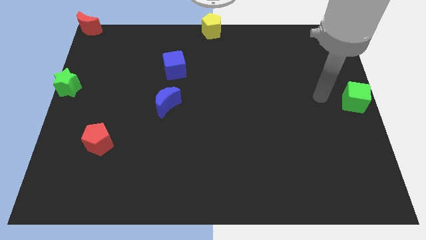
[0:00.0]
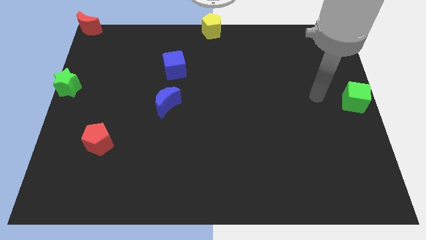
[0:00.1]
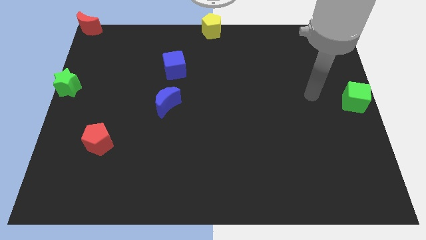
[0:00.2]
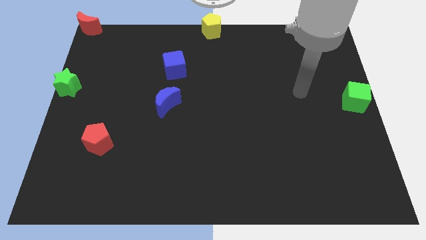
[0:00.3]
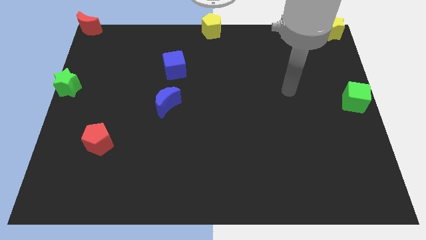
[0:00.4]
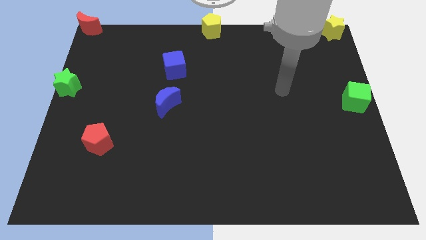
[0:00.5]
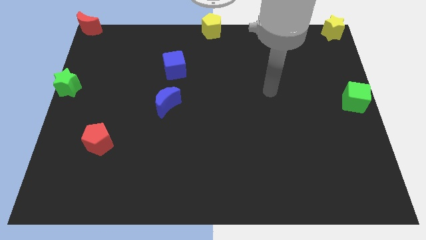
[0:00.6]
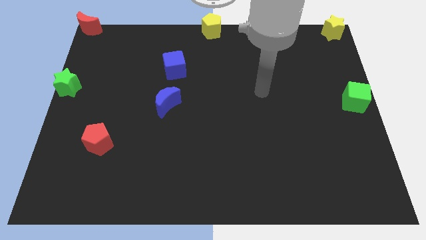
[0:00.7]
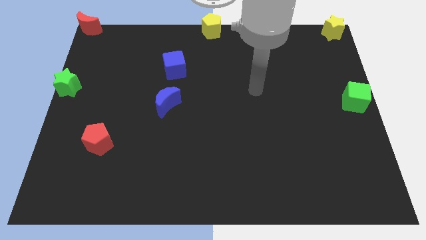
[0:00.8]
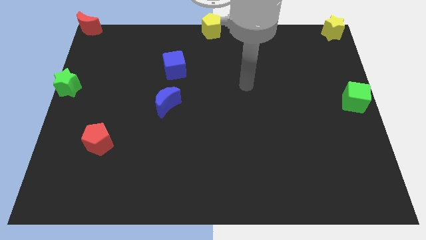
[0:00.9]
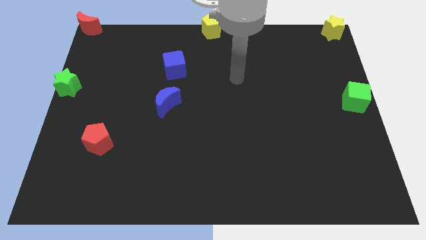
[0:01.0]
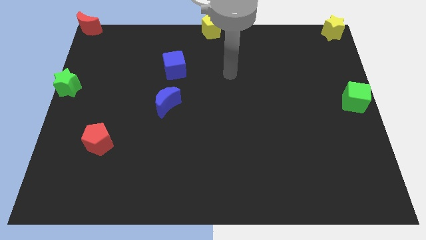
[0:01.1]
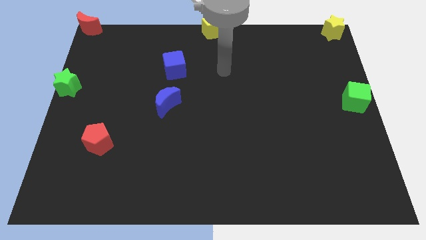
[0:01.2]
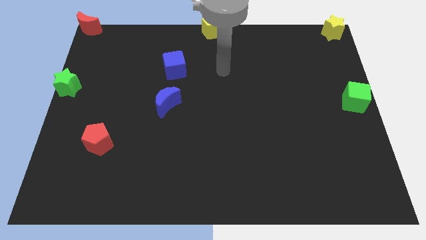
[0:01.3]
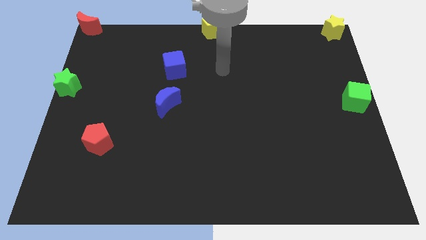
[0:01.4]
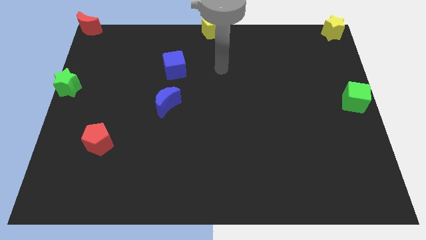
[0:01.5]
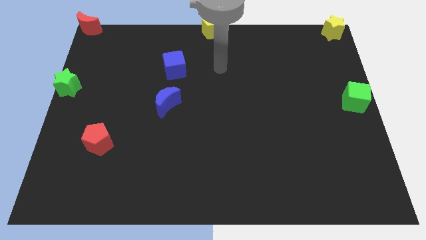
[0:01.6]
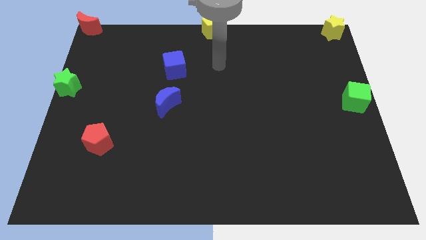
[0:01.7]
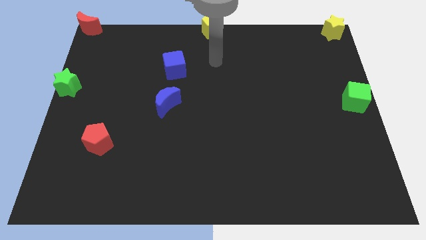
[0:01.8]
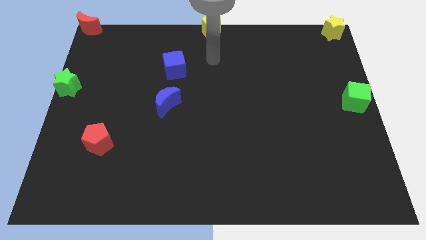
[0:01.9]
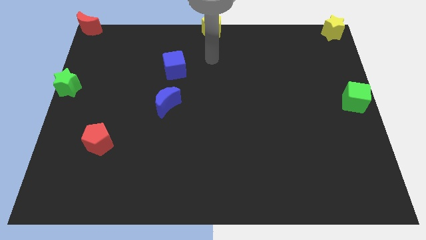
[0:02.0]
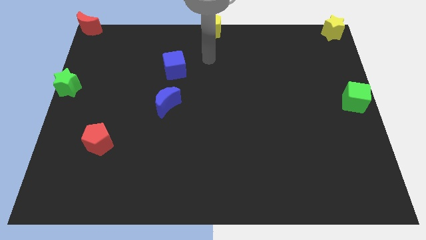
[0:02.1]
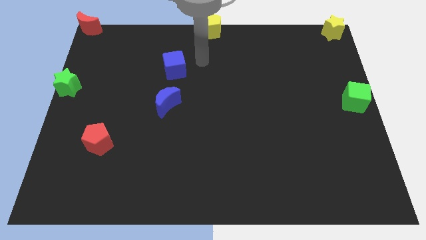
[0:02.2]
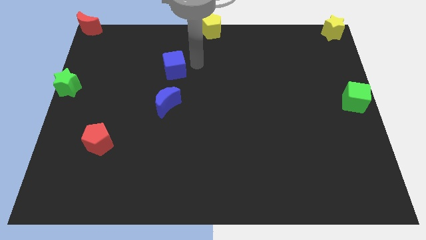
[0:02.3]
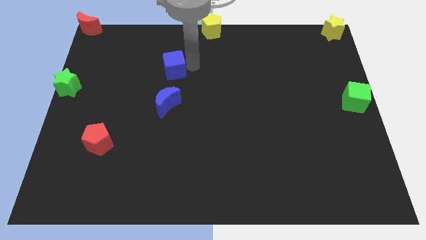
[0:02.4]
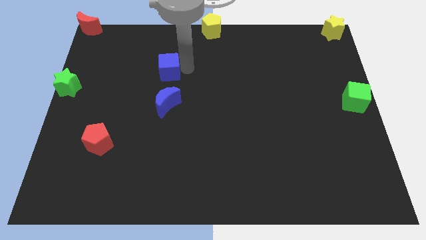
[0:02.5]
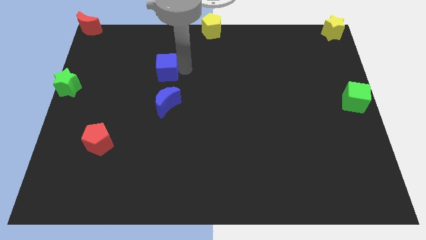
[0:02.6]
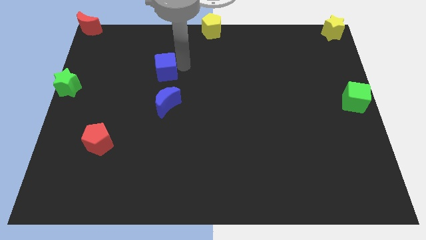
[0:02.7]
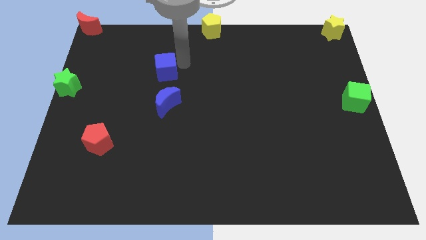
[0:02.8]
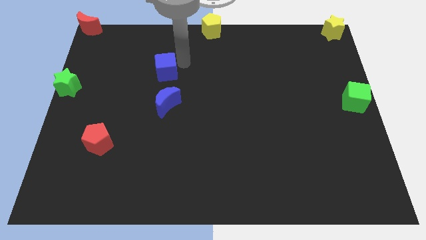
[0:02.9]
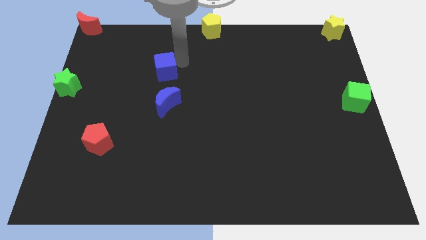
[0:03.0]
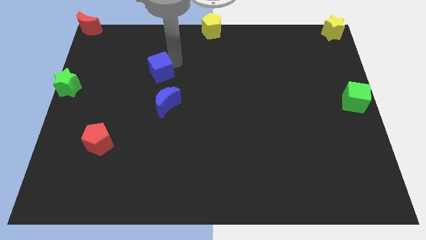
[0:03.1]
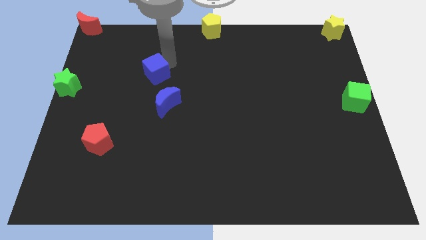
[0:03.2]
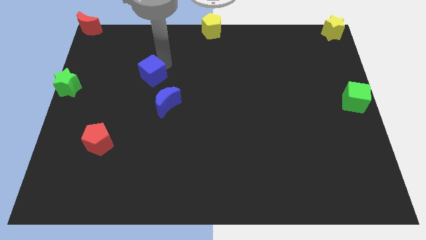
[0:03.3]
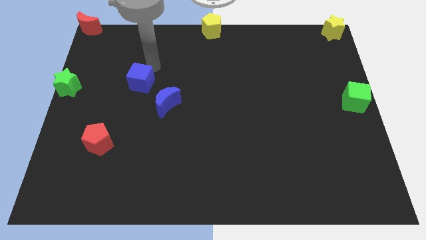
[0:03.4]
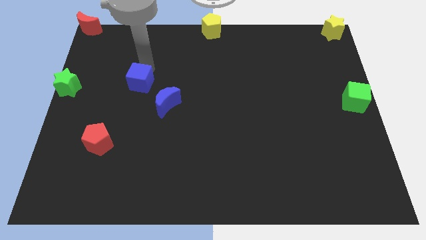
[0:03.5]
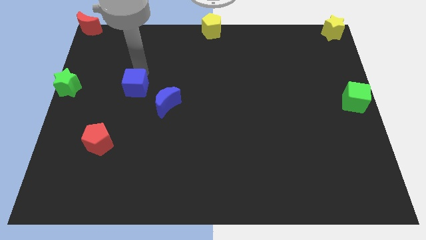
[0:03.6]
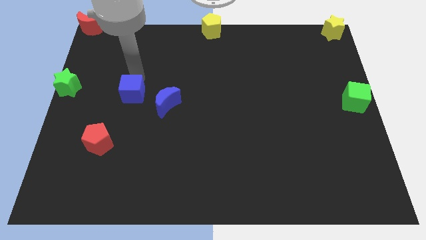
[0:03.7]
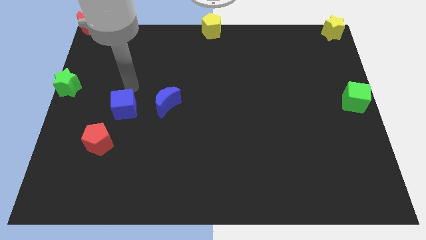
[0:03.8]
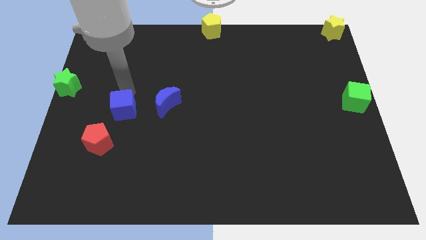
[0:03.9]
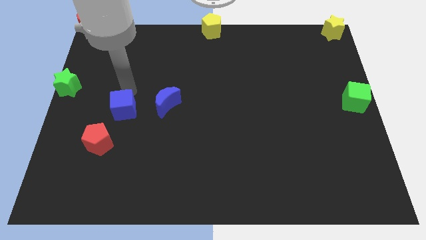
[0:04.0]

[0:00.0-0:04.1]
move the blue cube to the left of the blue crescent

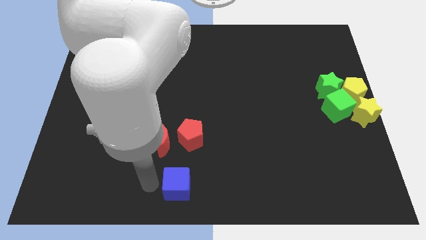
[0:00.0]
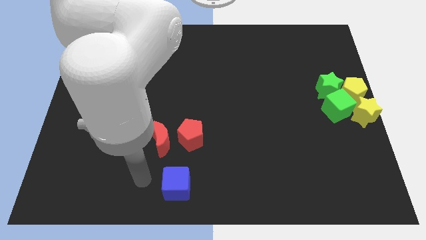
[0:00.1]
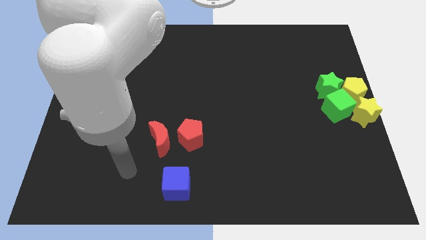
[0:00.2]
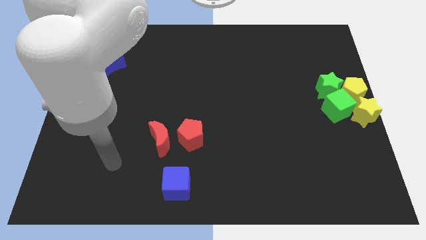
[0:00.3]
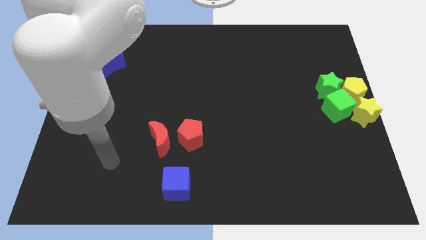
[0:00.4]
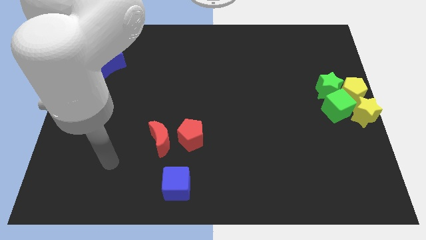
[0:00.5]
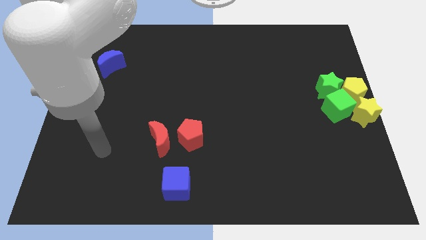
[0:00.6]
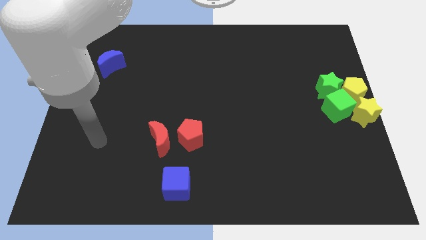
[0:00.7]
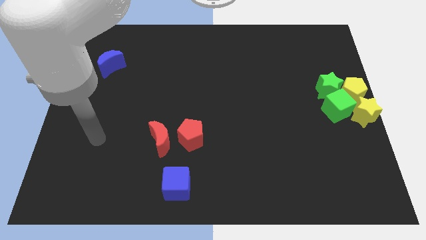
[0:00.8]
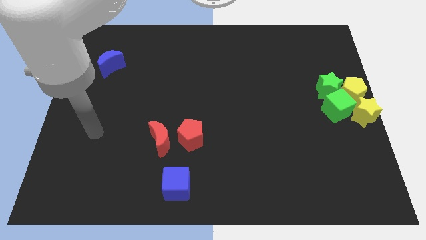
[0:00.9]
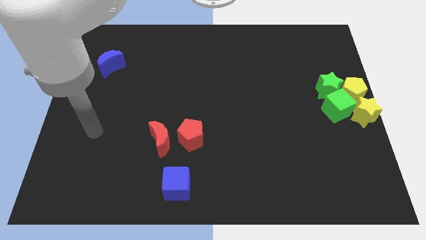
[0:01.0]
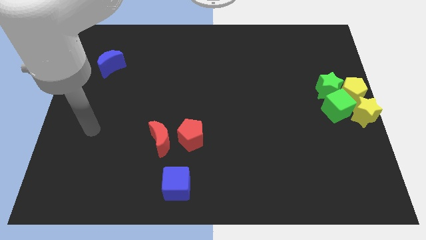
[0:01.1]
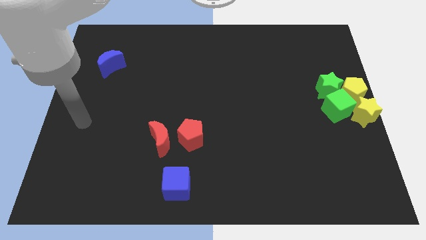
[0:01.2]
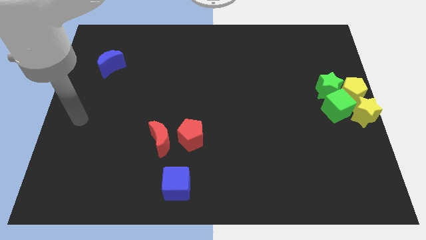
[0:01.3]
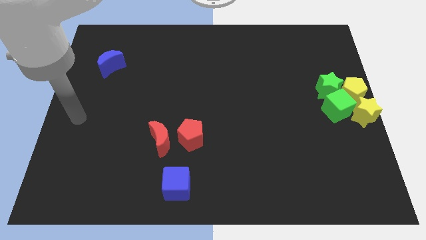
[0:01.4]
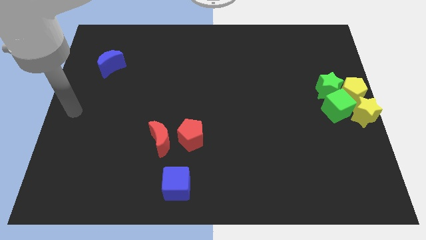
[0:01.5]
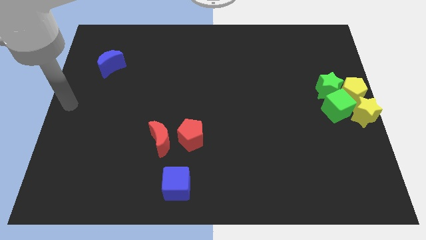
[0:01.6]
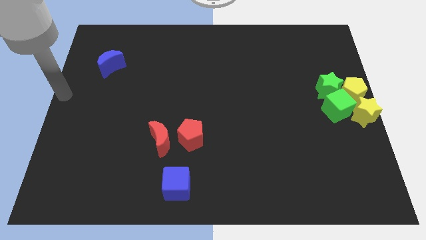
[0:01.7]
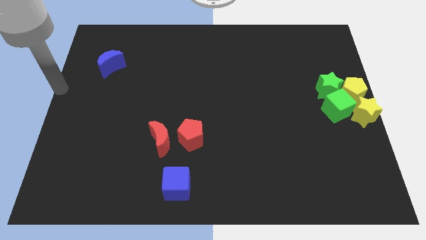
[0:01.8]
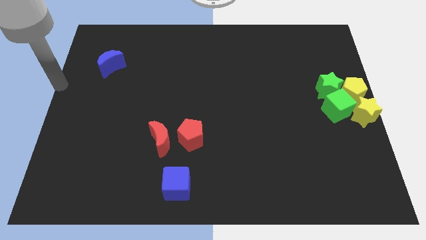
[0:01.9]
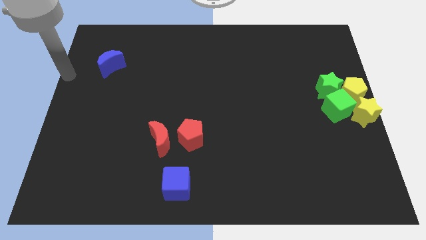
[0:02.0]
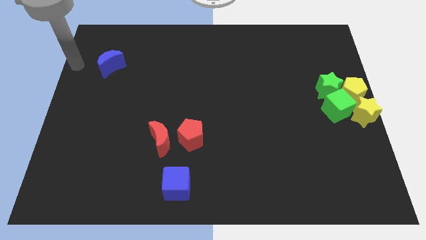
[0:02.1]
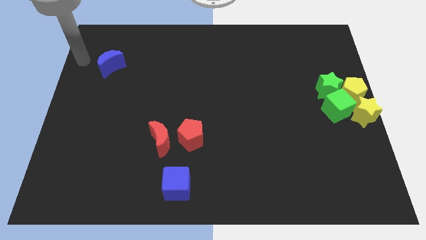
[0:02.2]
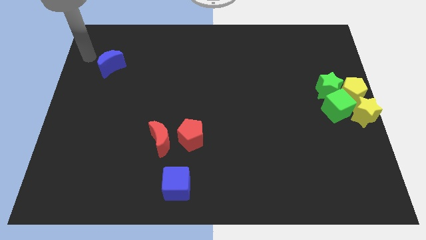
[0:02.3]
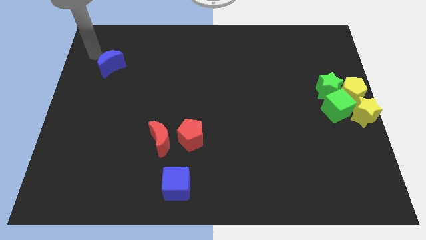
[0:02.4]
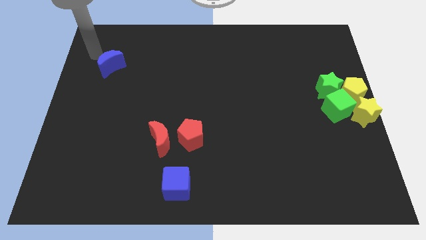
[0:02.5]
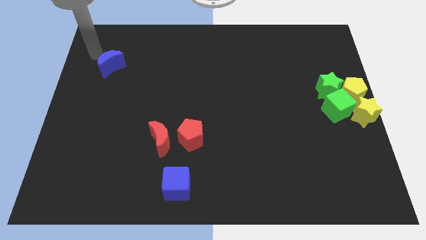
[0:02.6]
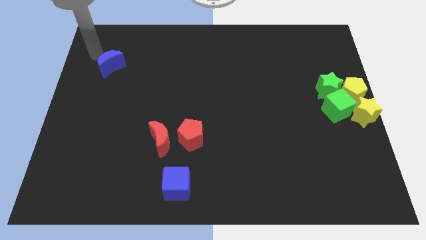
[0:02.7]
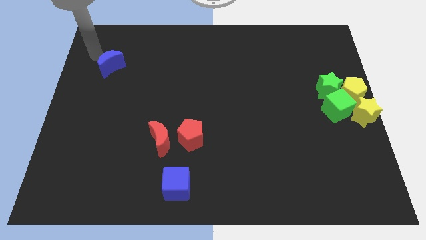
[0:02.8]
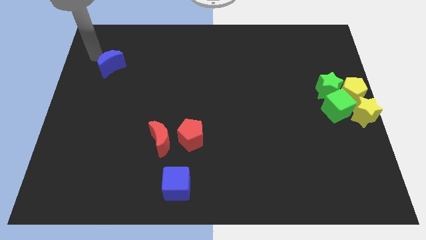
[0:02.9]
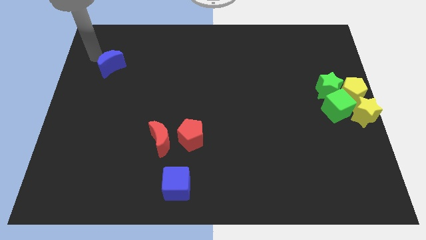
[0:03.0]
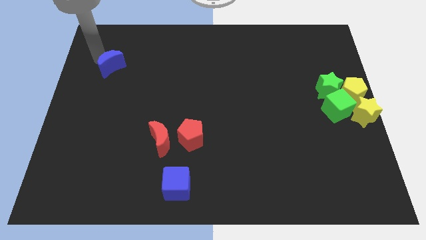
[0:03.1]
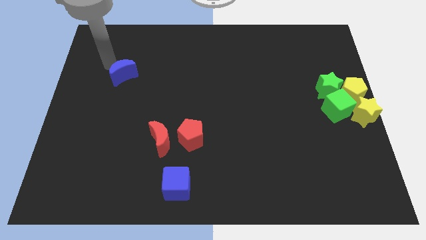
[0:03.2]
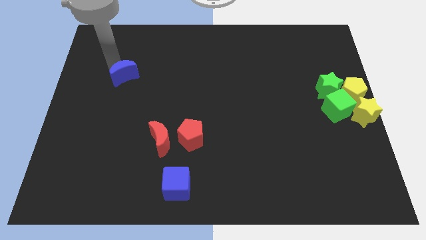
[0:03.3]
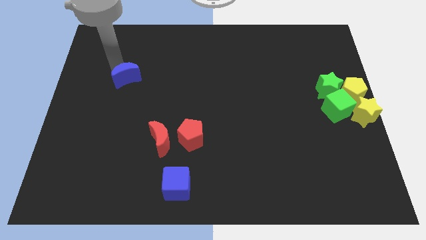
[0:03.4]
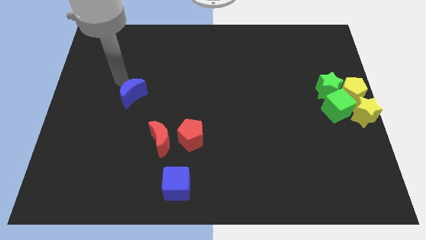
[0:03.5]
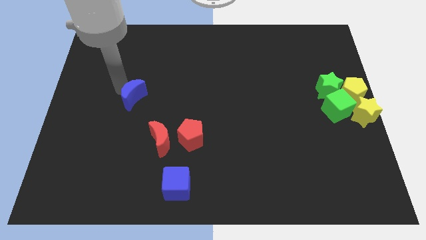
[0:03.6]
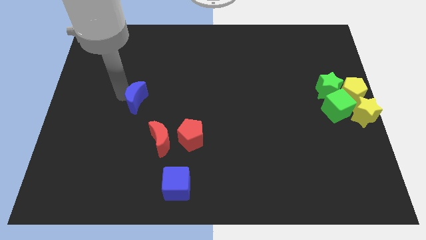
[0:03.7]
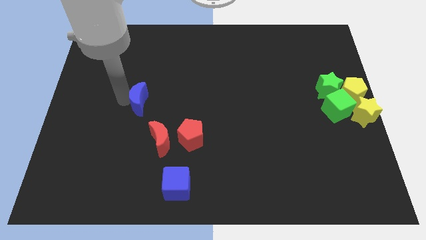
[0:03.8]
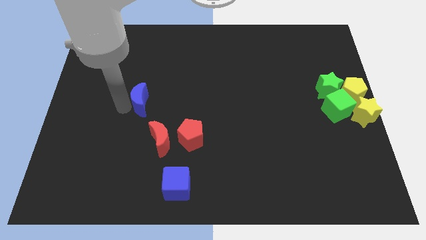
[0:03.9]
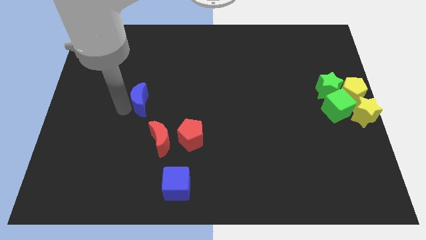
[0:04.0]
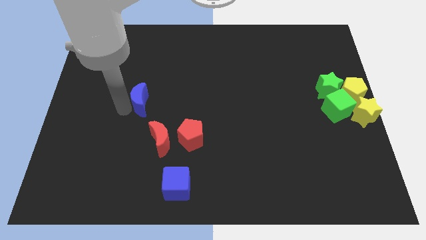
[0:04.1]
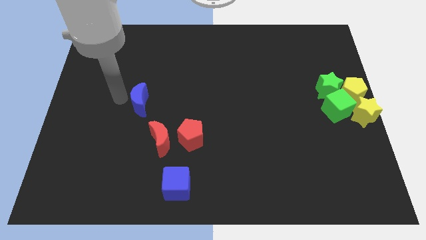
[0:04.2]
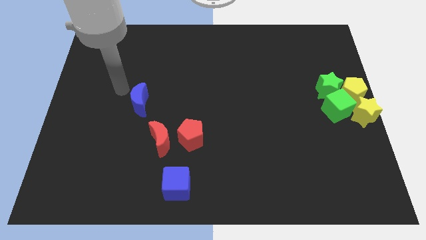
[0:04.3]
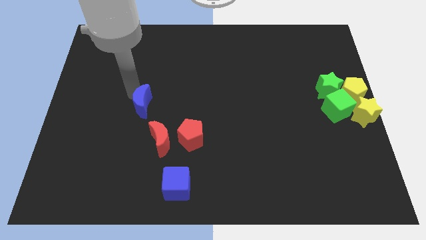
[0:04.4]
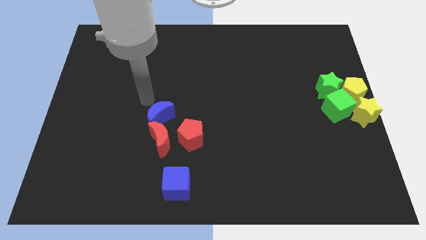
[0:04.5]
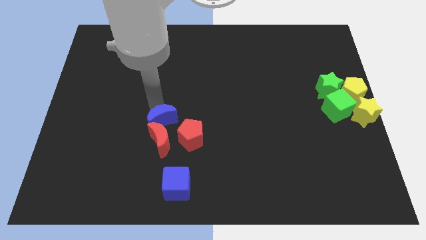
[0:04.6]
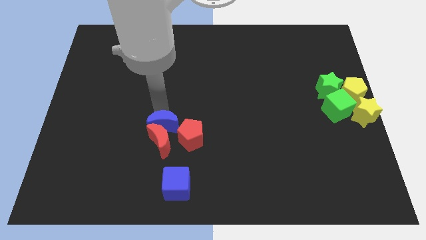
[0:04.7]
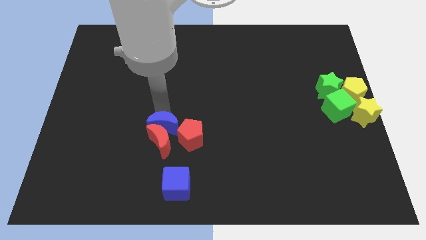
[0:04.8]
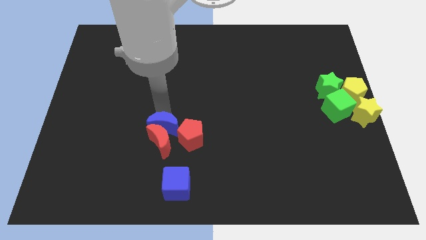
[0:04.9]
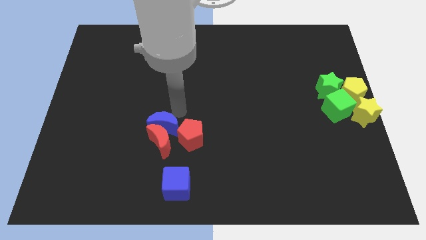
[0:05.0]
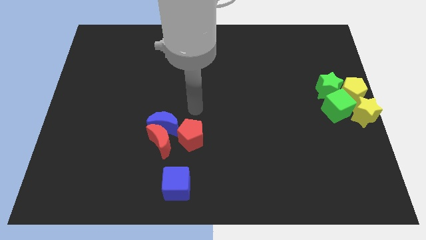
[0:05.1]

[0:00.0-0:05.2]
push the blue crescent to the top of the red crescent

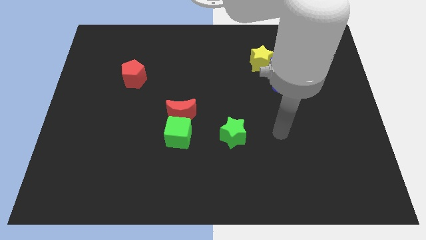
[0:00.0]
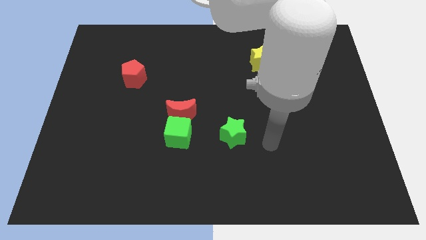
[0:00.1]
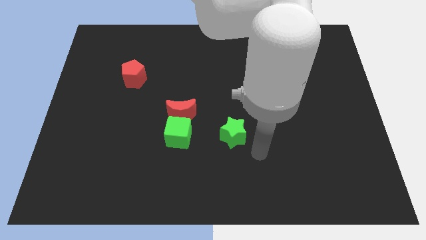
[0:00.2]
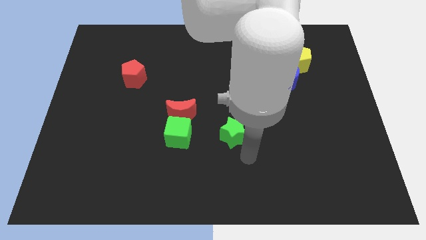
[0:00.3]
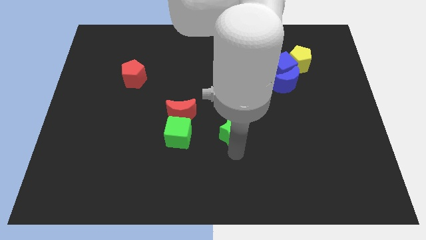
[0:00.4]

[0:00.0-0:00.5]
move the arm to the bottom of the green star
